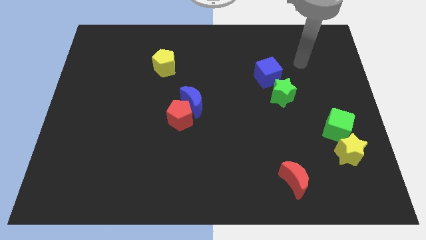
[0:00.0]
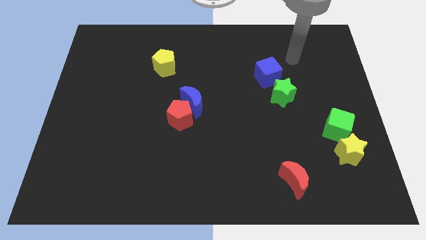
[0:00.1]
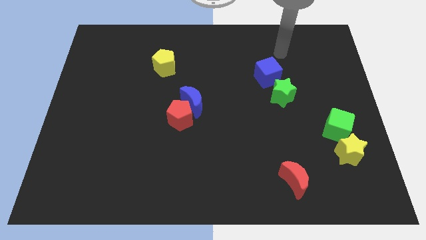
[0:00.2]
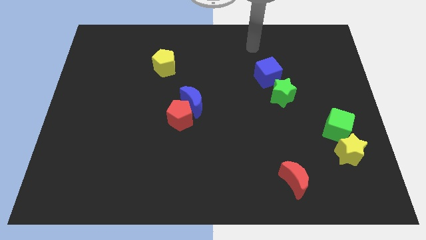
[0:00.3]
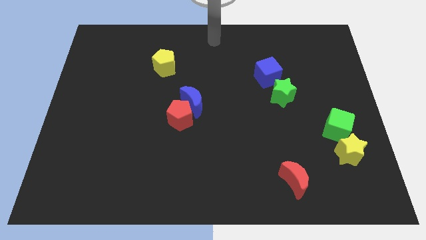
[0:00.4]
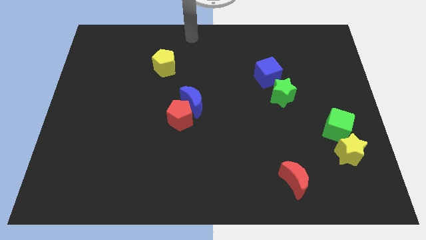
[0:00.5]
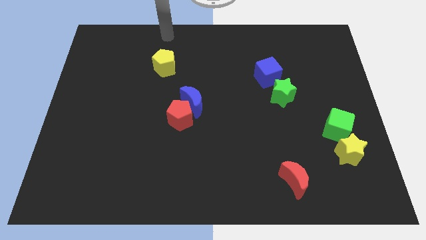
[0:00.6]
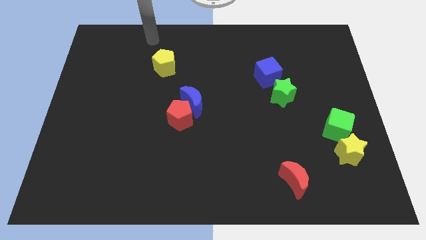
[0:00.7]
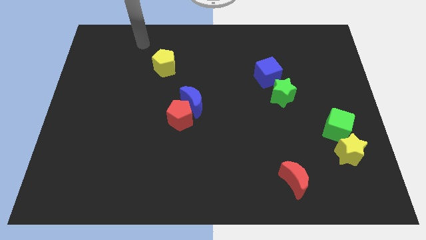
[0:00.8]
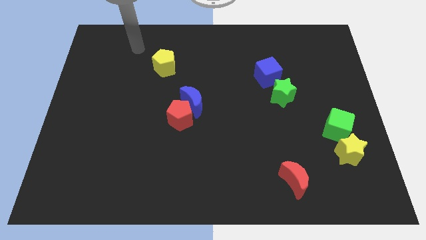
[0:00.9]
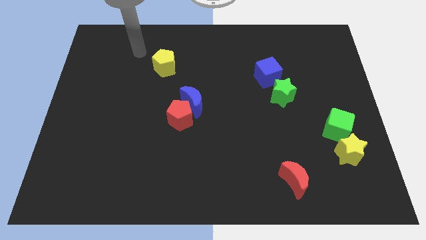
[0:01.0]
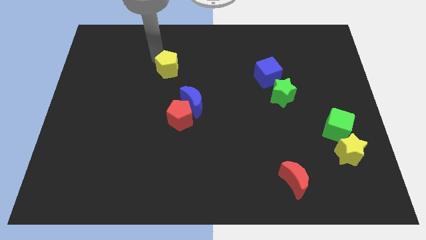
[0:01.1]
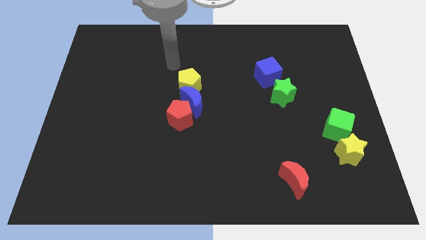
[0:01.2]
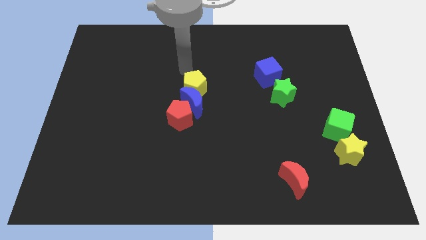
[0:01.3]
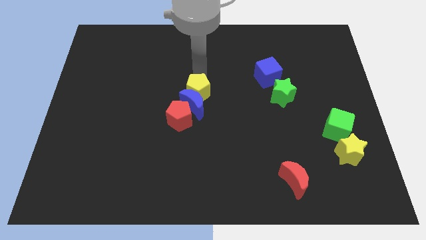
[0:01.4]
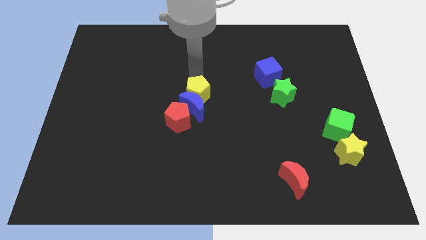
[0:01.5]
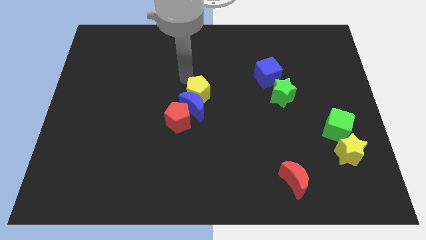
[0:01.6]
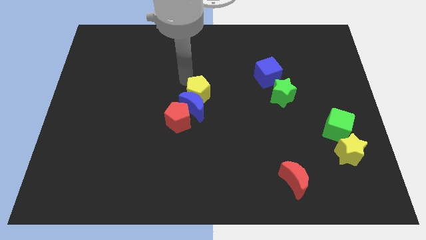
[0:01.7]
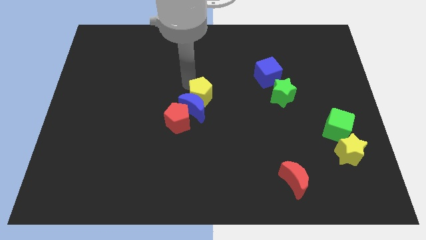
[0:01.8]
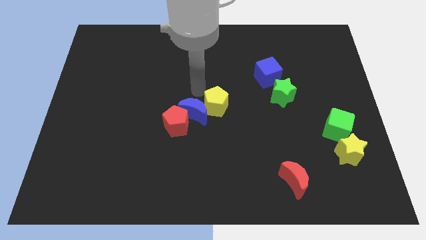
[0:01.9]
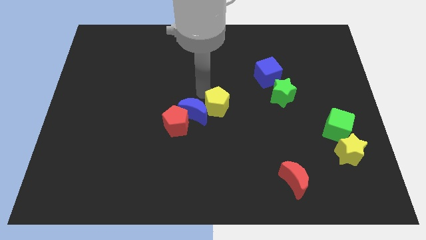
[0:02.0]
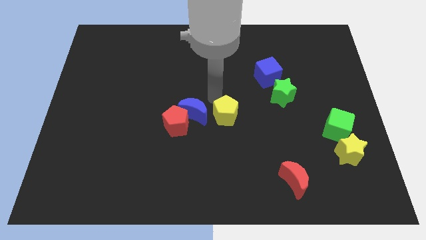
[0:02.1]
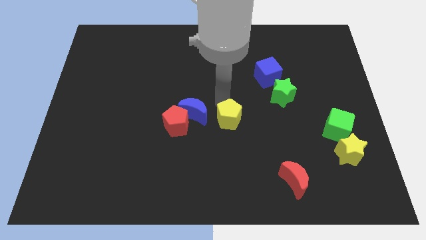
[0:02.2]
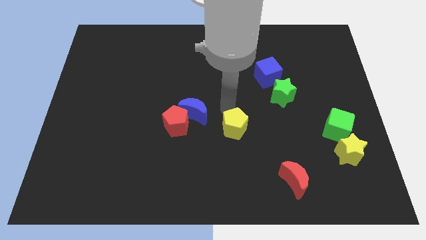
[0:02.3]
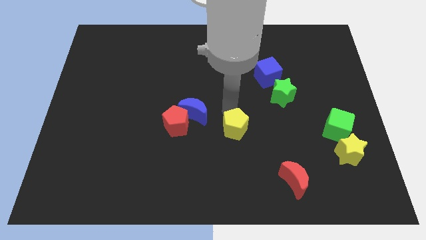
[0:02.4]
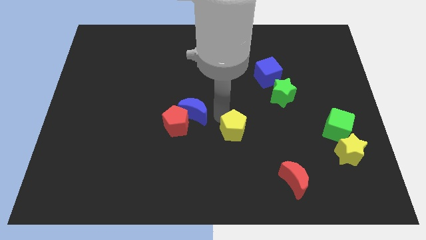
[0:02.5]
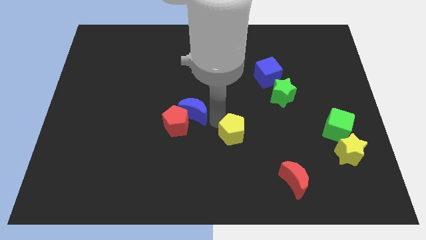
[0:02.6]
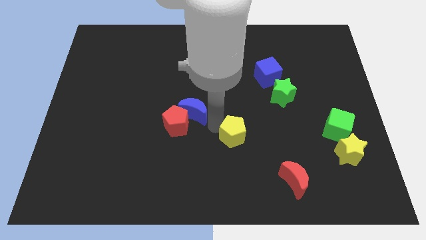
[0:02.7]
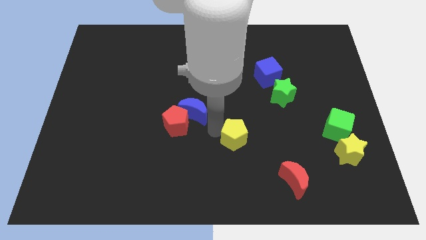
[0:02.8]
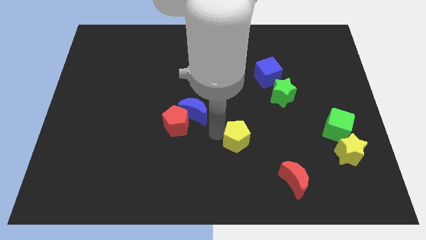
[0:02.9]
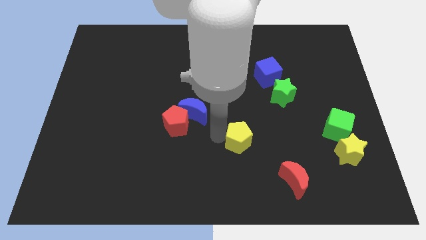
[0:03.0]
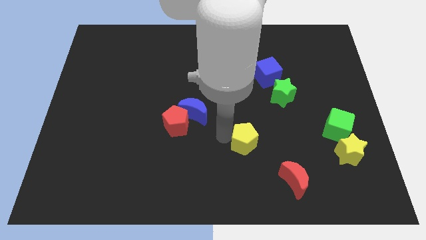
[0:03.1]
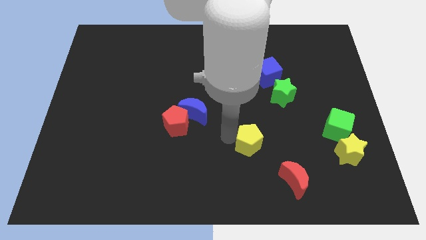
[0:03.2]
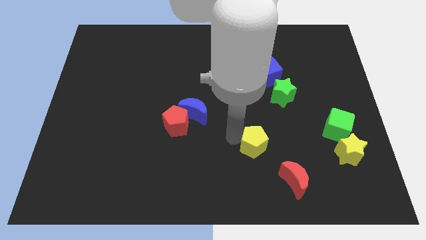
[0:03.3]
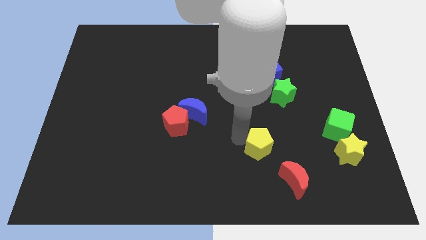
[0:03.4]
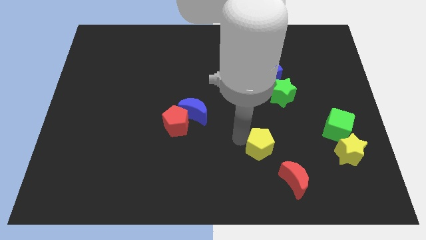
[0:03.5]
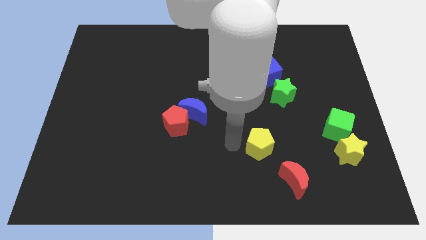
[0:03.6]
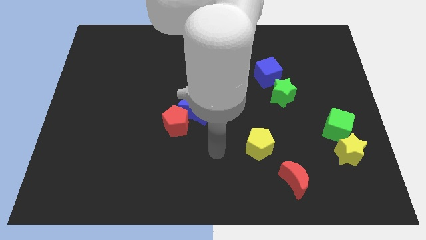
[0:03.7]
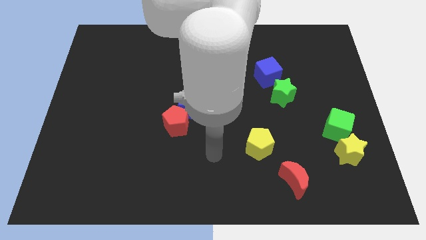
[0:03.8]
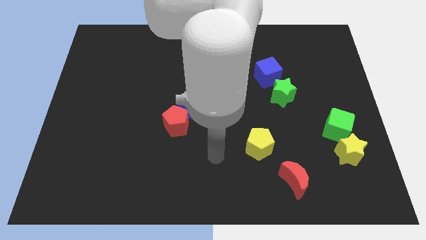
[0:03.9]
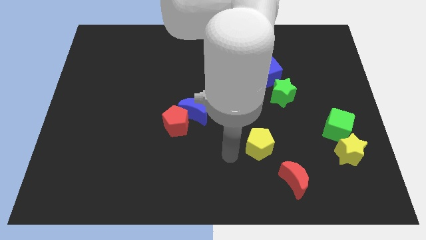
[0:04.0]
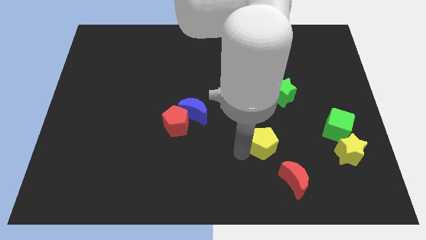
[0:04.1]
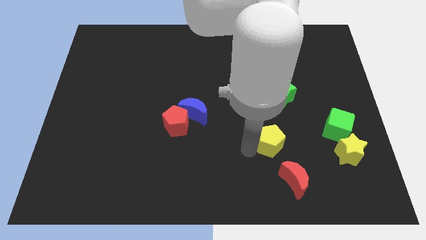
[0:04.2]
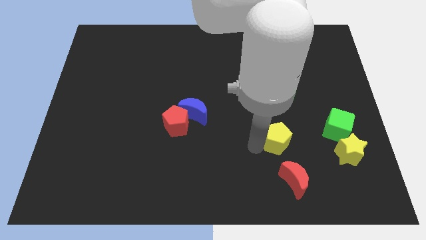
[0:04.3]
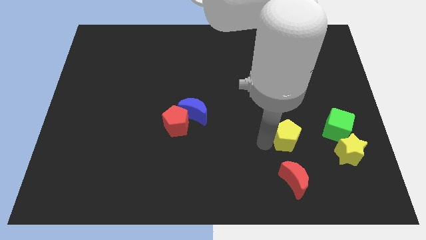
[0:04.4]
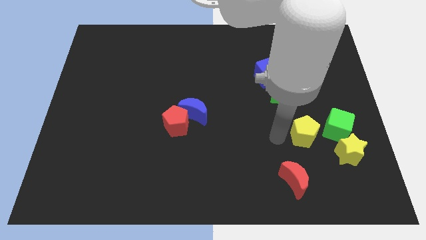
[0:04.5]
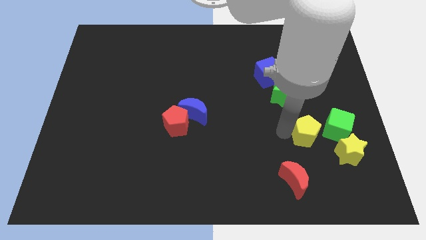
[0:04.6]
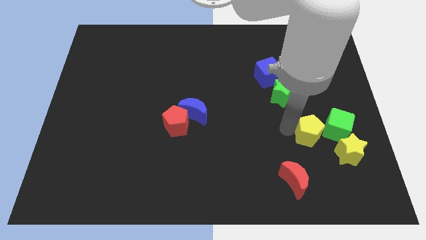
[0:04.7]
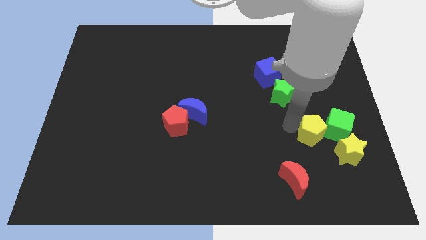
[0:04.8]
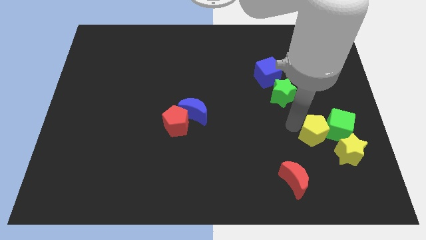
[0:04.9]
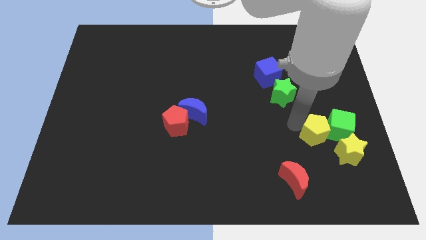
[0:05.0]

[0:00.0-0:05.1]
push the yellow pentagon close to the green cube

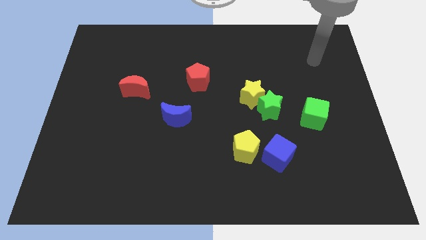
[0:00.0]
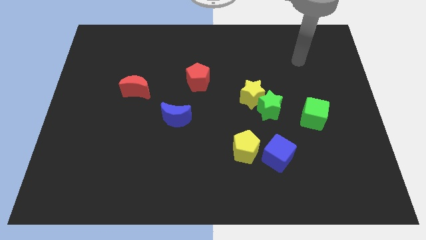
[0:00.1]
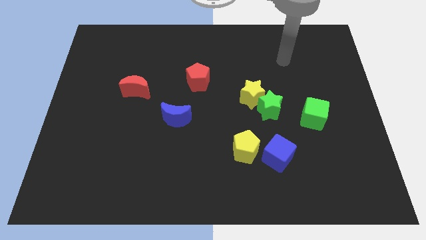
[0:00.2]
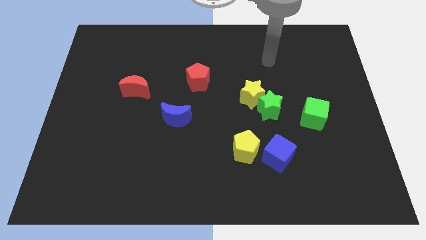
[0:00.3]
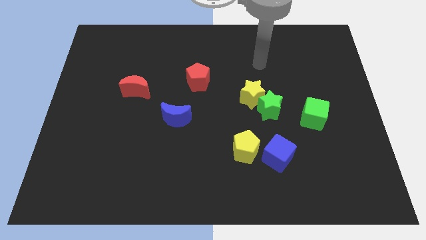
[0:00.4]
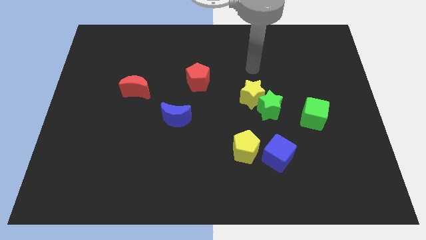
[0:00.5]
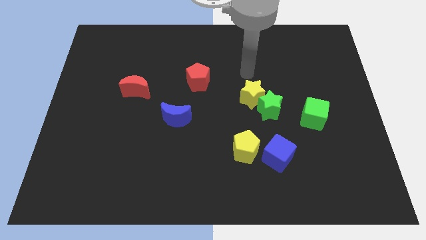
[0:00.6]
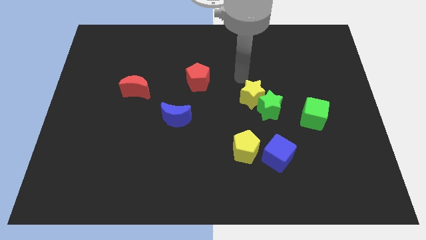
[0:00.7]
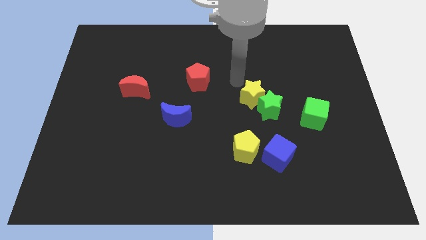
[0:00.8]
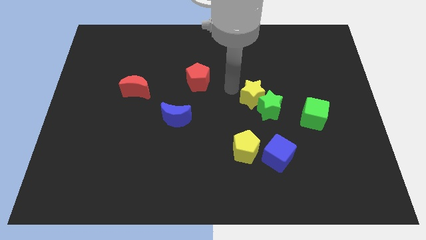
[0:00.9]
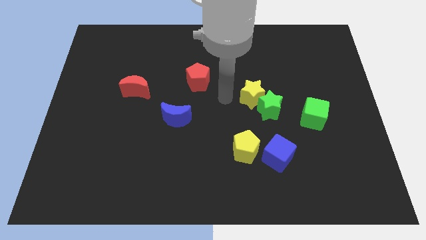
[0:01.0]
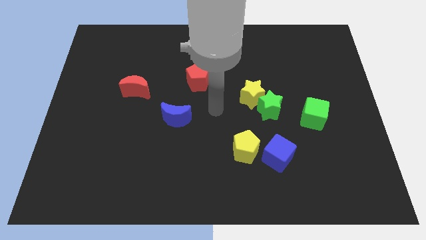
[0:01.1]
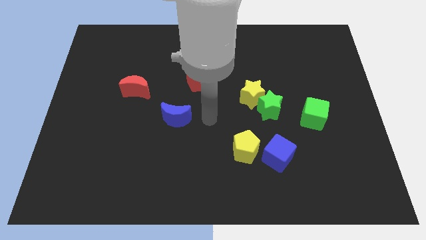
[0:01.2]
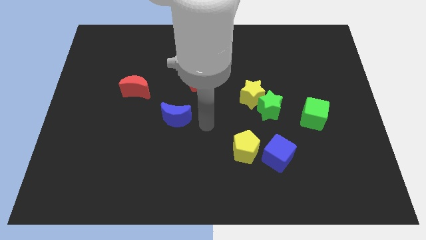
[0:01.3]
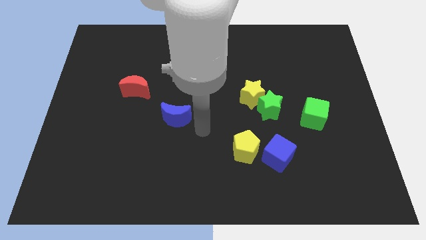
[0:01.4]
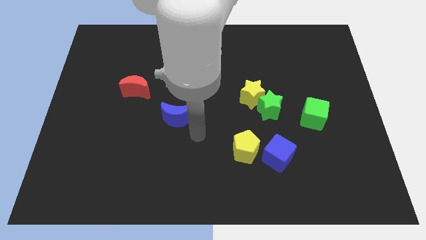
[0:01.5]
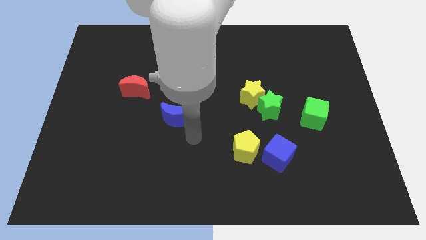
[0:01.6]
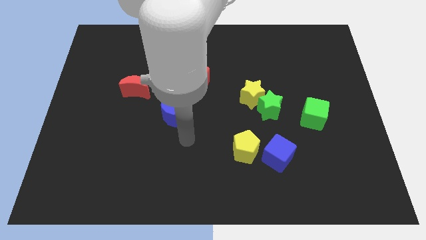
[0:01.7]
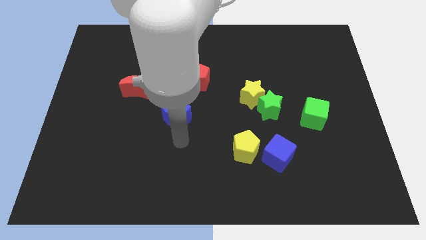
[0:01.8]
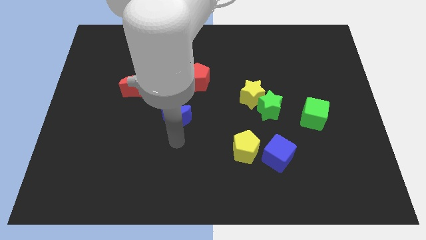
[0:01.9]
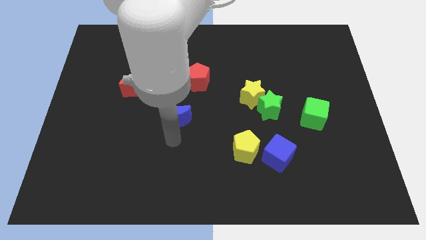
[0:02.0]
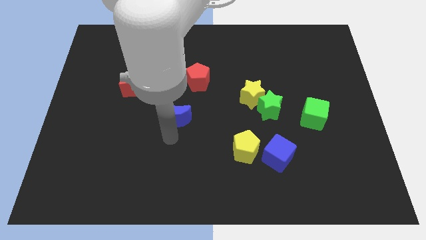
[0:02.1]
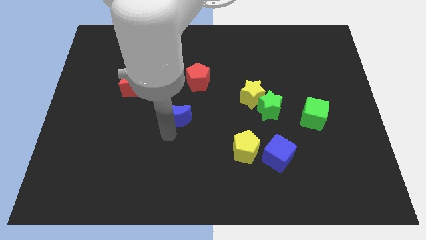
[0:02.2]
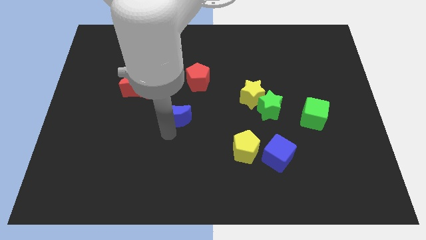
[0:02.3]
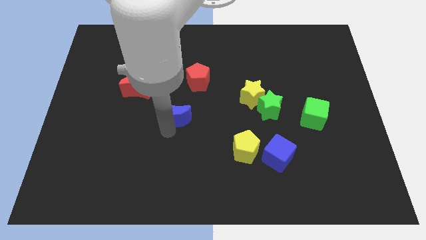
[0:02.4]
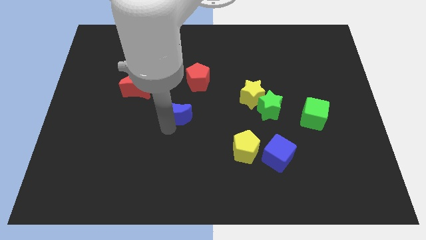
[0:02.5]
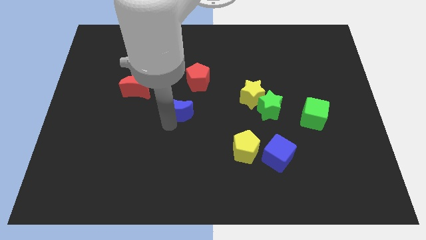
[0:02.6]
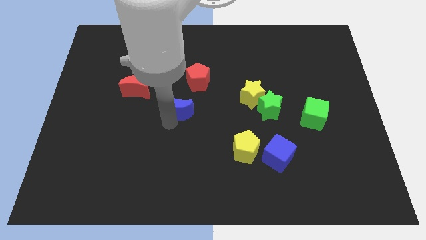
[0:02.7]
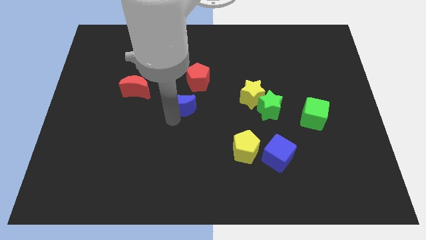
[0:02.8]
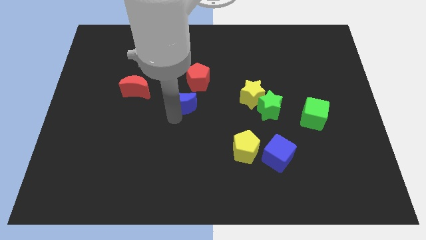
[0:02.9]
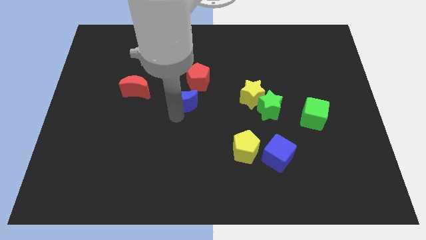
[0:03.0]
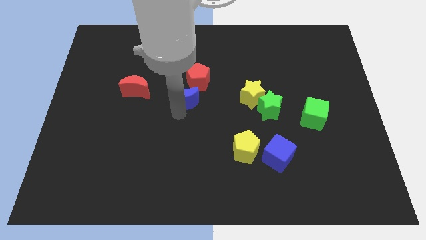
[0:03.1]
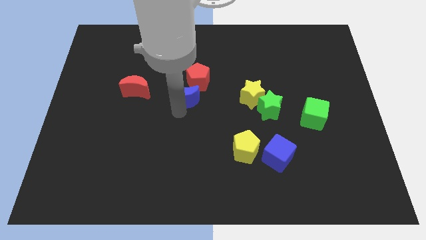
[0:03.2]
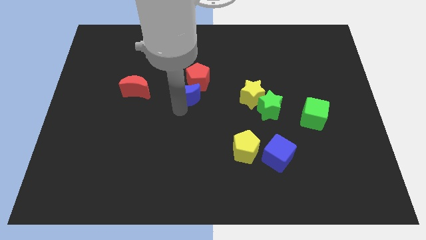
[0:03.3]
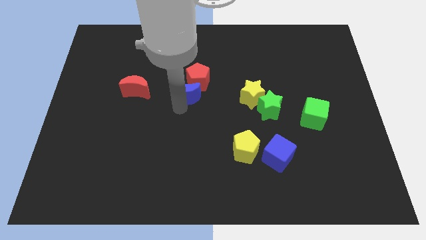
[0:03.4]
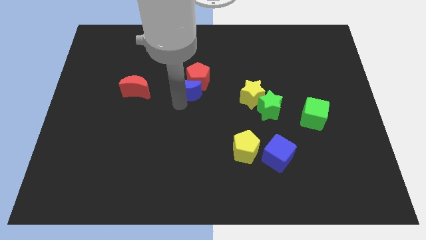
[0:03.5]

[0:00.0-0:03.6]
slide the blue moon close to the red pentagon
